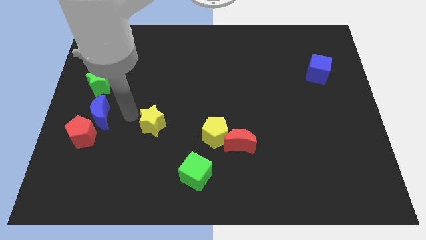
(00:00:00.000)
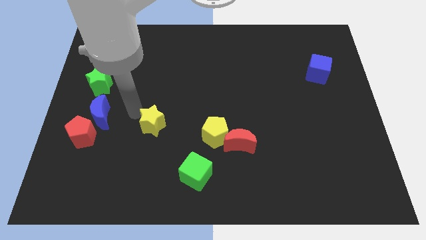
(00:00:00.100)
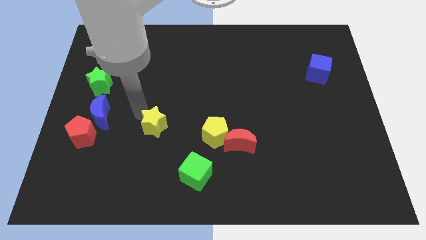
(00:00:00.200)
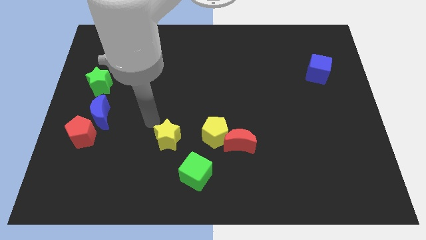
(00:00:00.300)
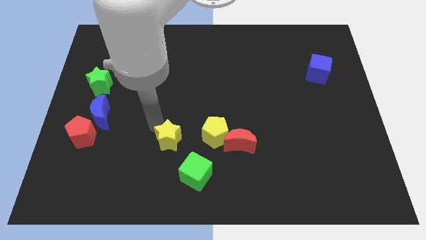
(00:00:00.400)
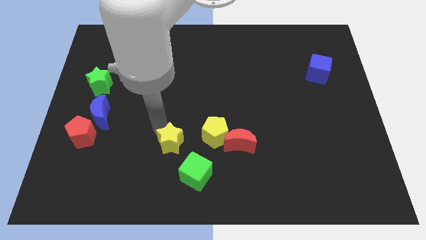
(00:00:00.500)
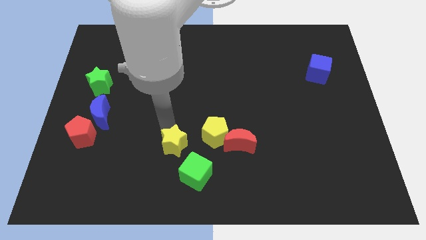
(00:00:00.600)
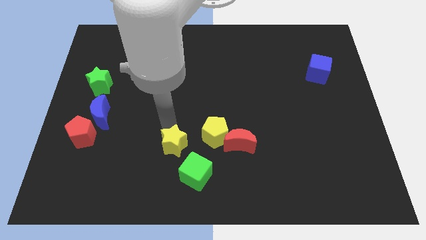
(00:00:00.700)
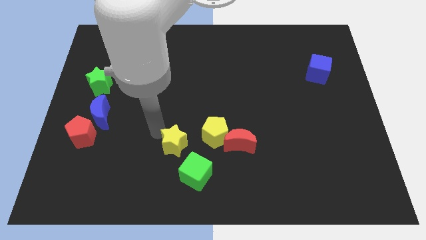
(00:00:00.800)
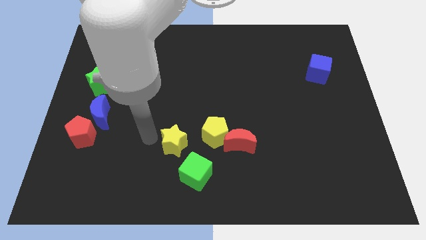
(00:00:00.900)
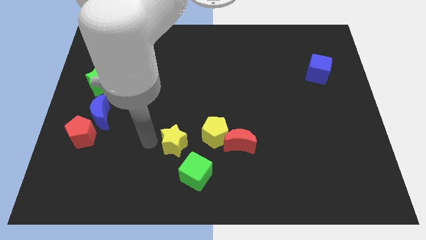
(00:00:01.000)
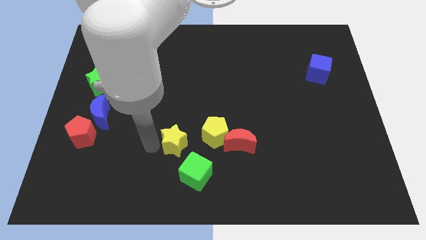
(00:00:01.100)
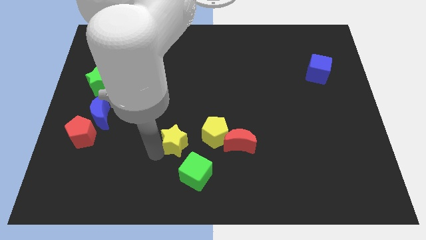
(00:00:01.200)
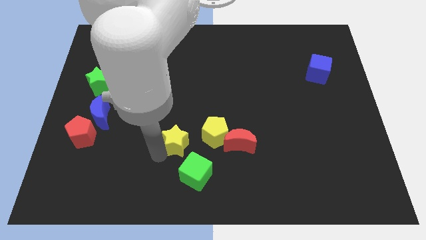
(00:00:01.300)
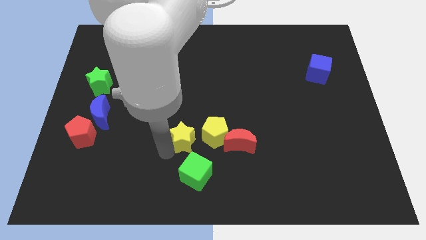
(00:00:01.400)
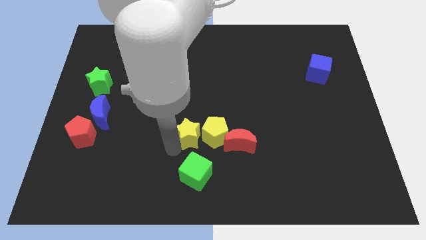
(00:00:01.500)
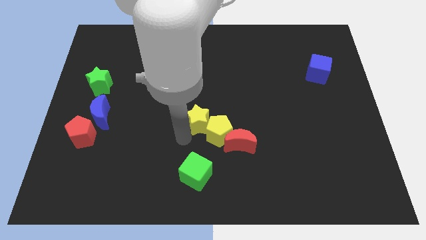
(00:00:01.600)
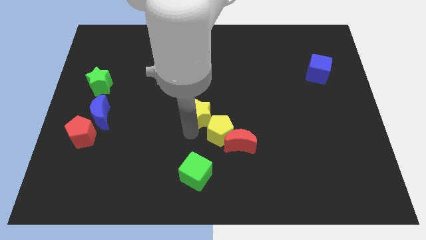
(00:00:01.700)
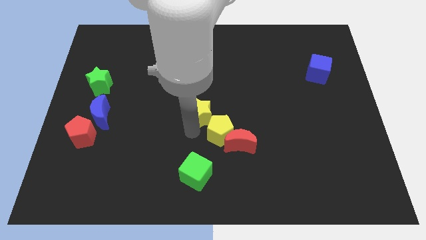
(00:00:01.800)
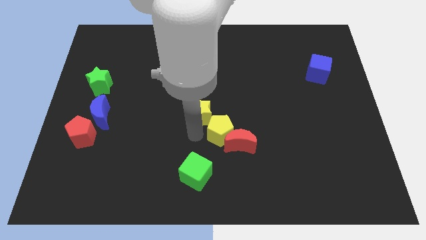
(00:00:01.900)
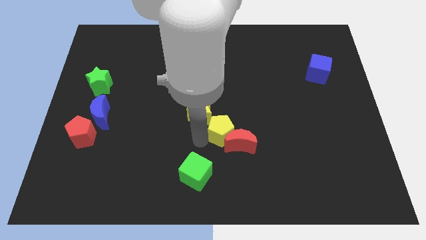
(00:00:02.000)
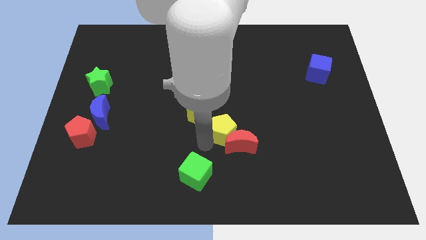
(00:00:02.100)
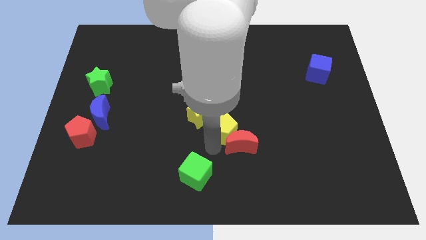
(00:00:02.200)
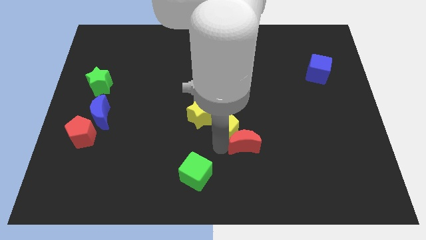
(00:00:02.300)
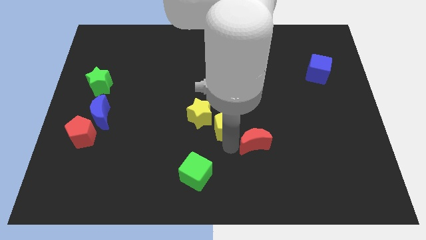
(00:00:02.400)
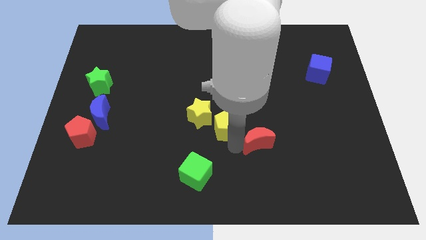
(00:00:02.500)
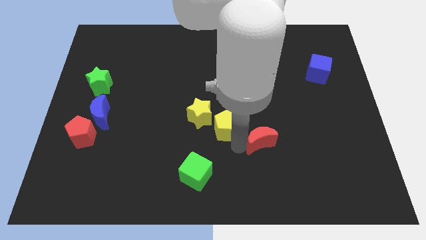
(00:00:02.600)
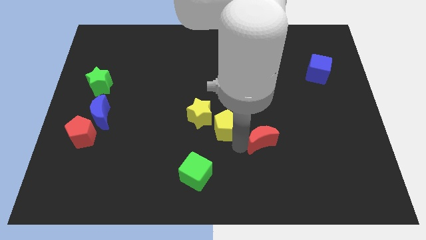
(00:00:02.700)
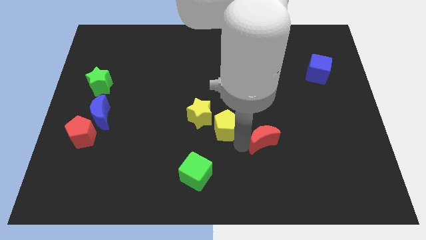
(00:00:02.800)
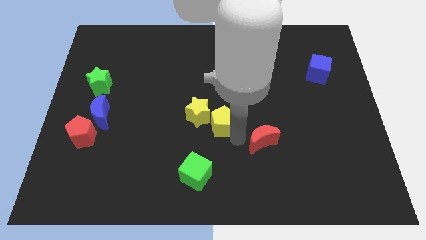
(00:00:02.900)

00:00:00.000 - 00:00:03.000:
move the yellow star close to yellow pentagon

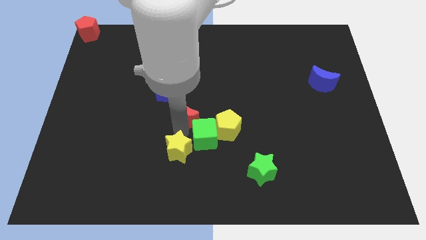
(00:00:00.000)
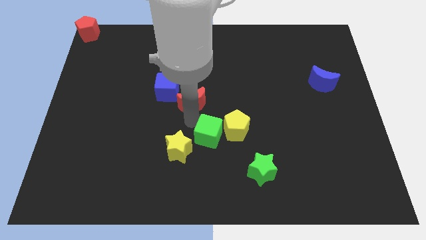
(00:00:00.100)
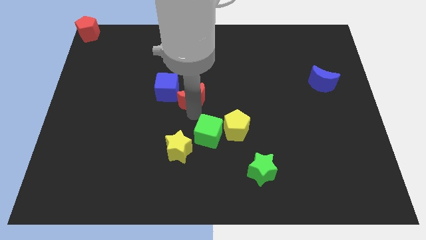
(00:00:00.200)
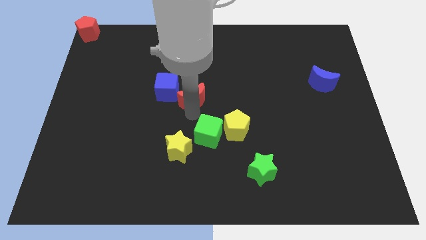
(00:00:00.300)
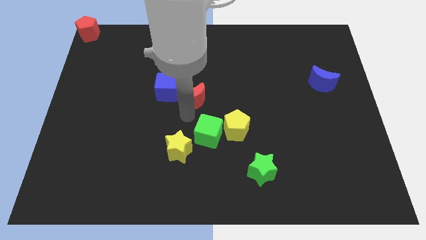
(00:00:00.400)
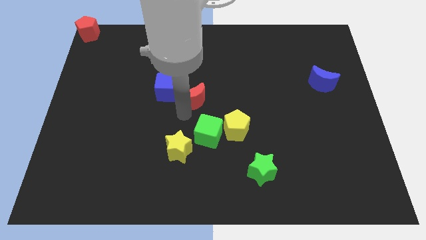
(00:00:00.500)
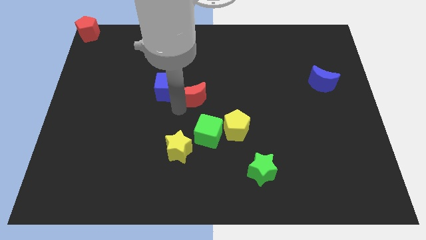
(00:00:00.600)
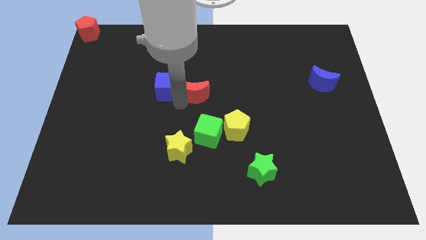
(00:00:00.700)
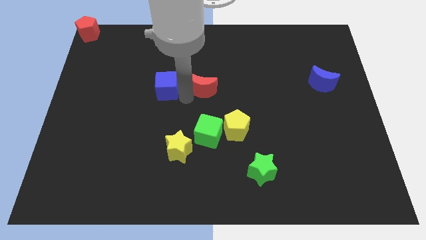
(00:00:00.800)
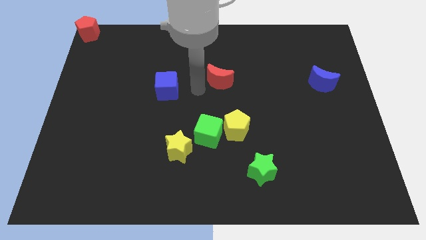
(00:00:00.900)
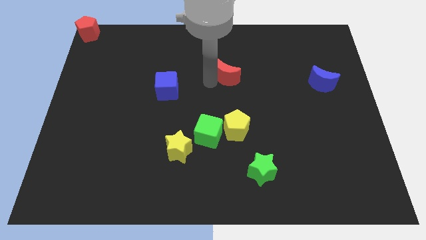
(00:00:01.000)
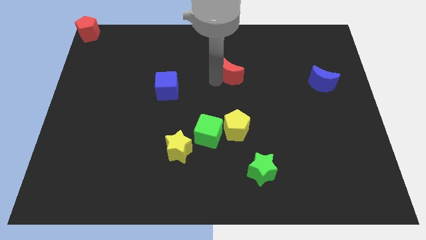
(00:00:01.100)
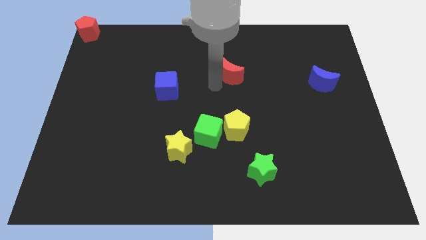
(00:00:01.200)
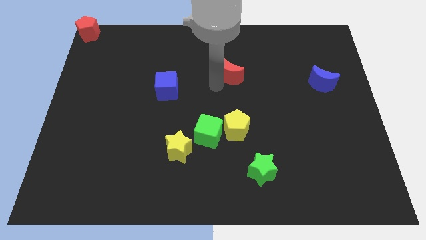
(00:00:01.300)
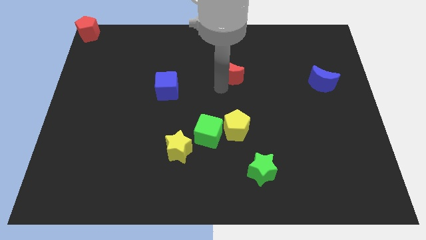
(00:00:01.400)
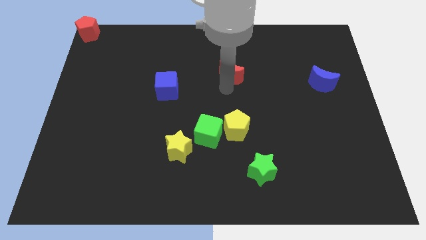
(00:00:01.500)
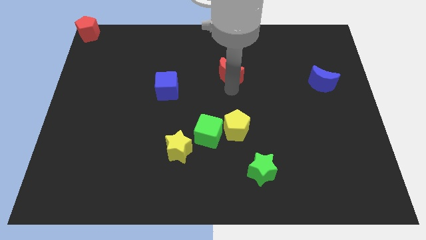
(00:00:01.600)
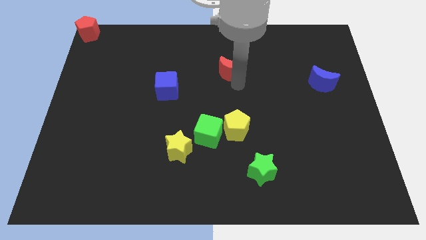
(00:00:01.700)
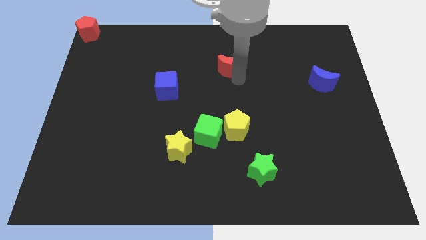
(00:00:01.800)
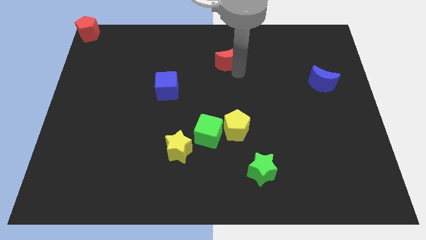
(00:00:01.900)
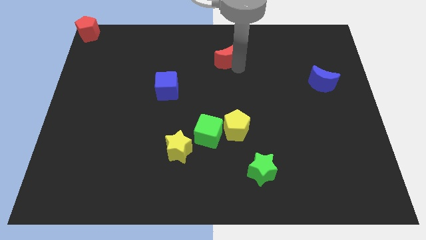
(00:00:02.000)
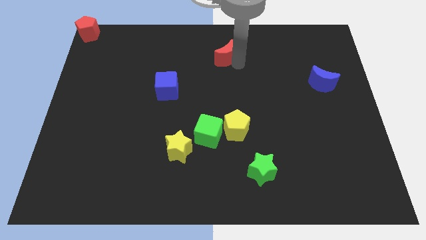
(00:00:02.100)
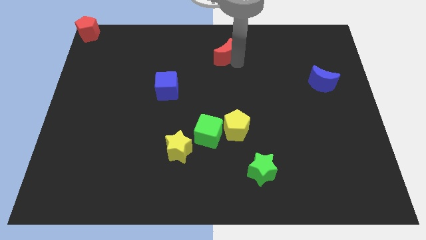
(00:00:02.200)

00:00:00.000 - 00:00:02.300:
push the red crescent towards the top center of the board

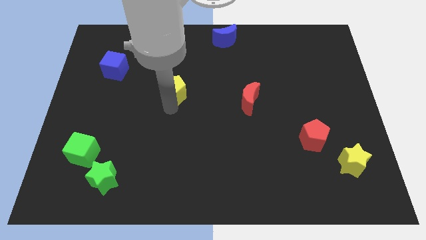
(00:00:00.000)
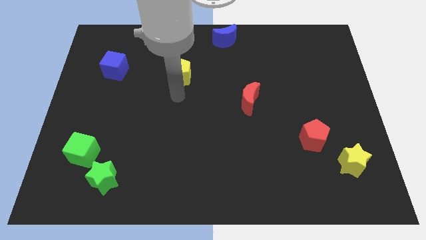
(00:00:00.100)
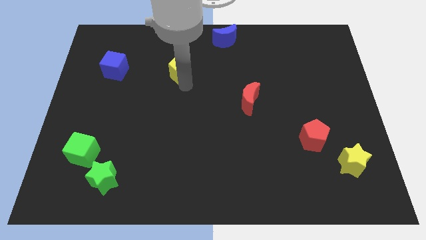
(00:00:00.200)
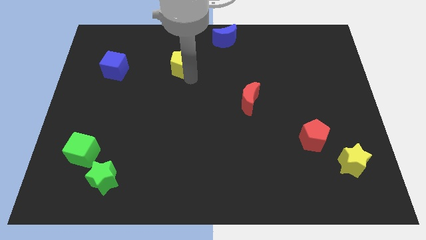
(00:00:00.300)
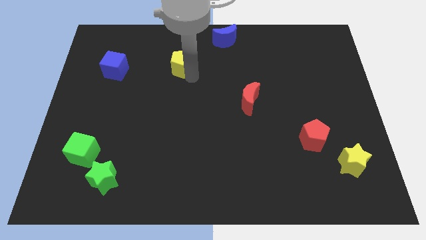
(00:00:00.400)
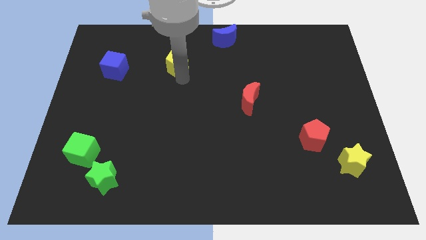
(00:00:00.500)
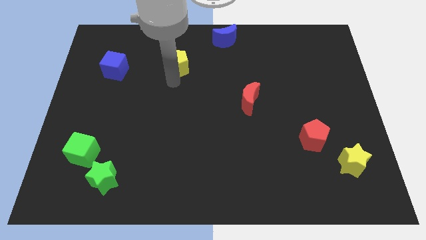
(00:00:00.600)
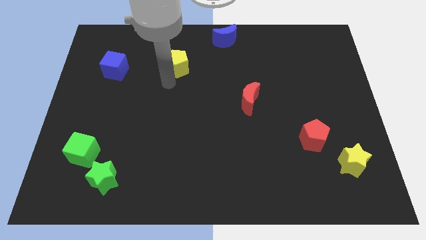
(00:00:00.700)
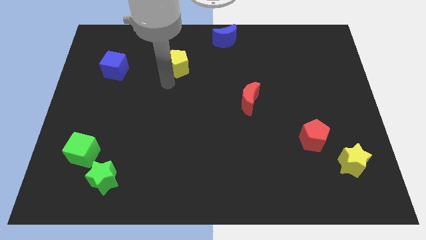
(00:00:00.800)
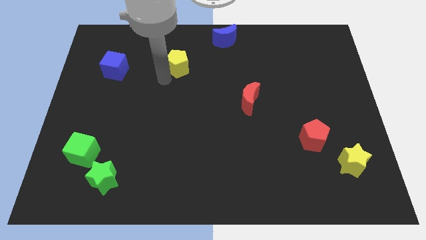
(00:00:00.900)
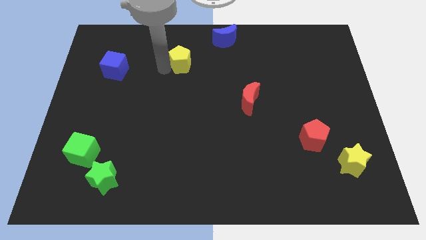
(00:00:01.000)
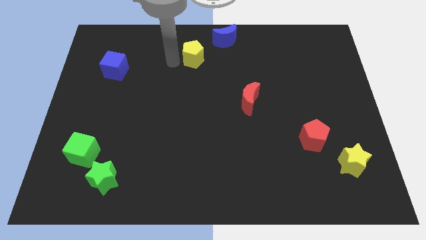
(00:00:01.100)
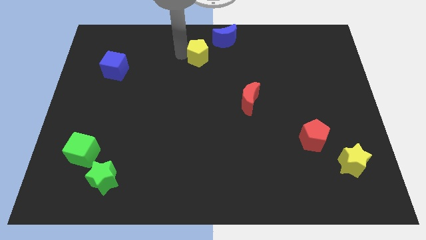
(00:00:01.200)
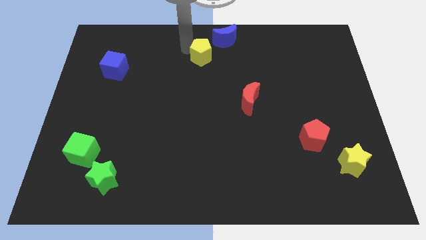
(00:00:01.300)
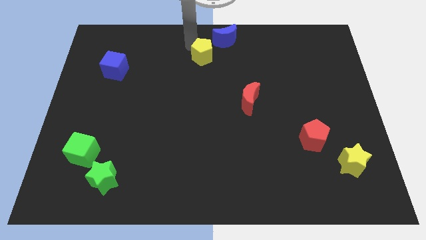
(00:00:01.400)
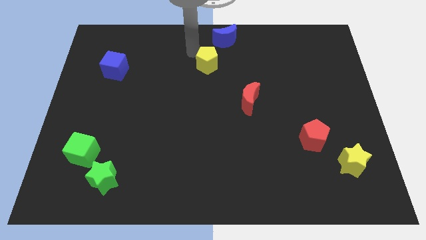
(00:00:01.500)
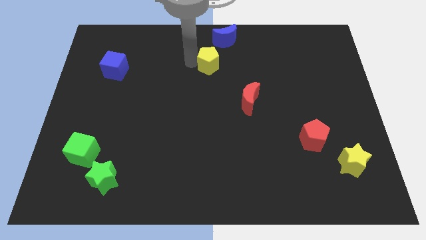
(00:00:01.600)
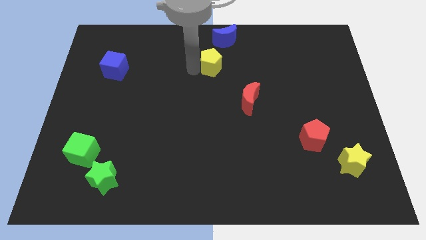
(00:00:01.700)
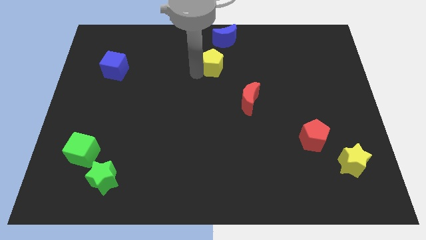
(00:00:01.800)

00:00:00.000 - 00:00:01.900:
move the yellow pentagon parallel to the right of blue cube

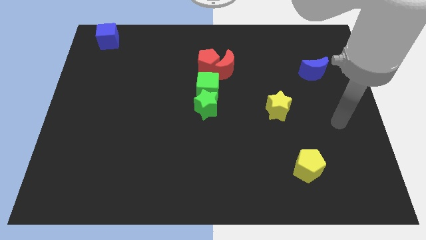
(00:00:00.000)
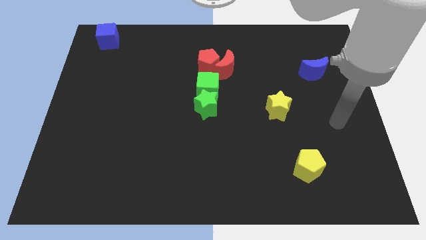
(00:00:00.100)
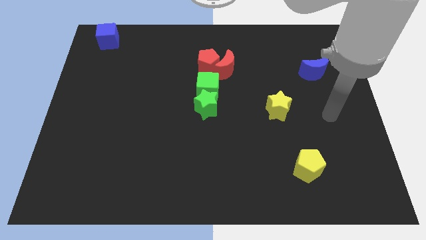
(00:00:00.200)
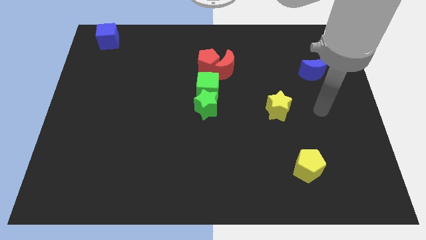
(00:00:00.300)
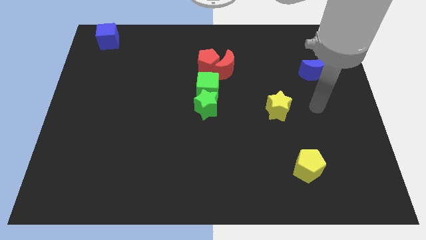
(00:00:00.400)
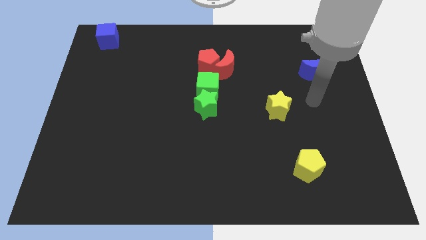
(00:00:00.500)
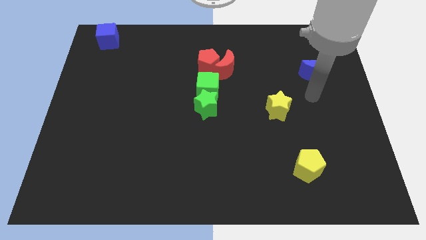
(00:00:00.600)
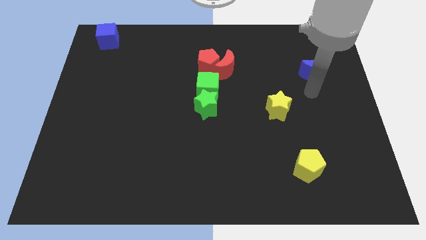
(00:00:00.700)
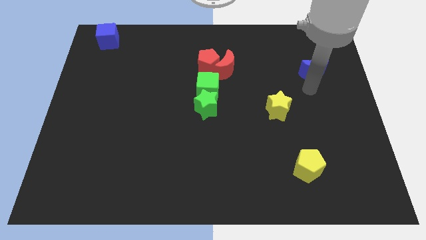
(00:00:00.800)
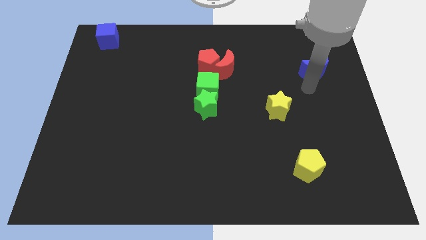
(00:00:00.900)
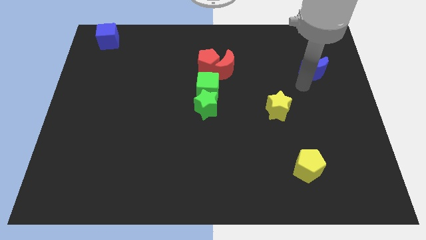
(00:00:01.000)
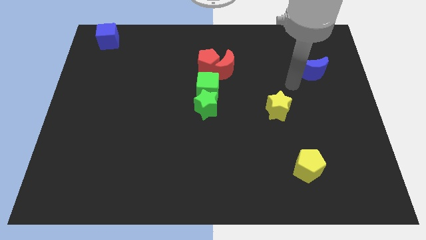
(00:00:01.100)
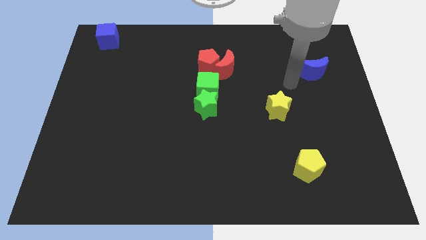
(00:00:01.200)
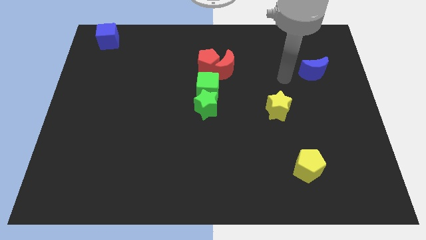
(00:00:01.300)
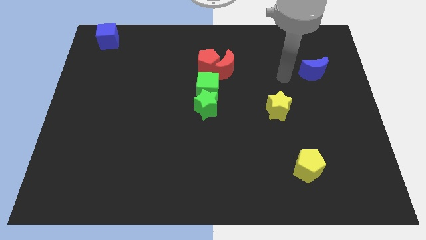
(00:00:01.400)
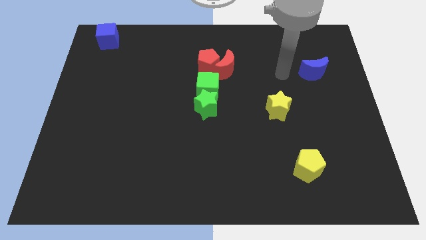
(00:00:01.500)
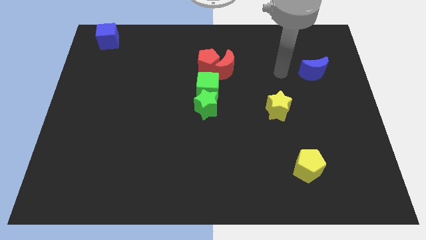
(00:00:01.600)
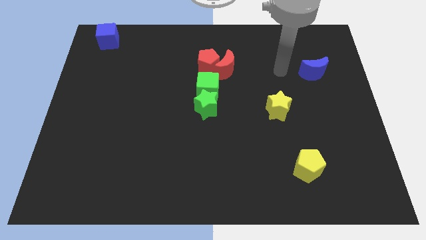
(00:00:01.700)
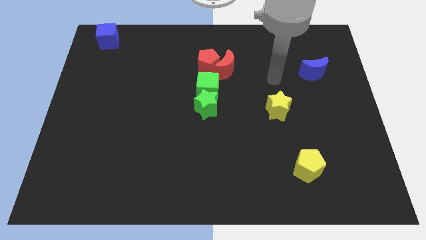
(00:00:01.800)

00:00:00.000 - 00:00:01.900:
move your hand to the left side of the blue moon
